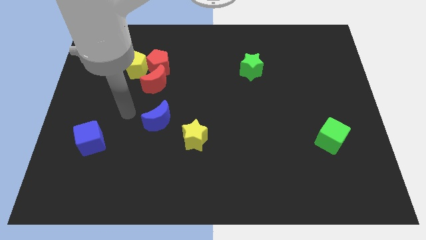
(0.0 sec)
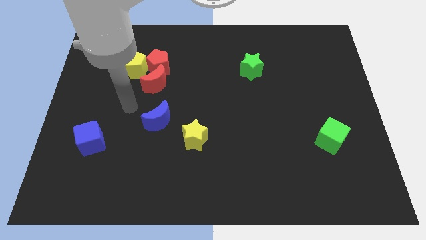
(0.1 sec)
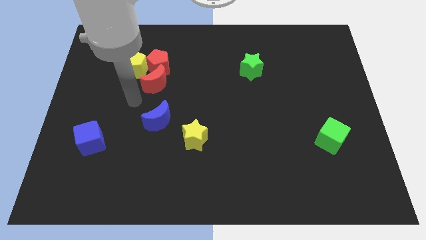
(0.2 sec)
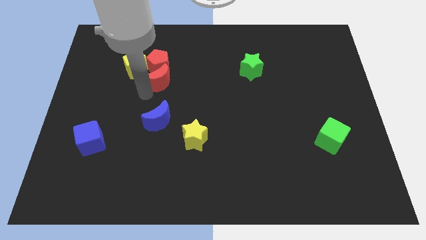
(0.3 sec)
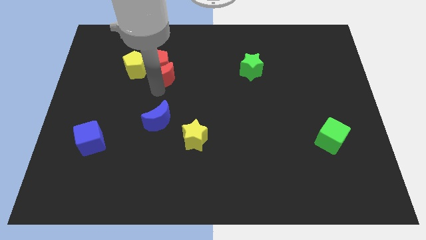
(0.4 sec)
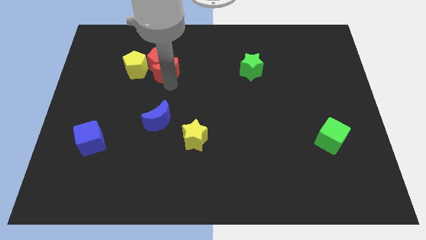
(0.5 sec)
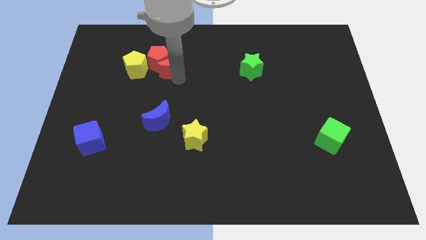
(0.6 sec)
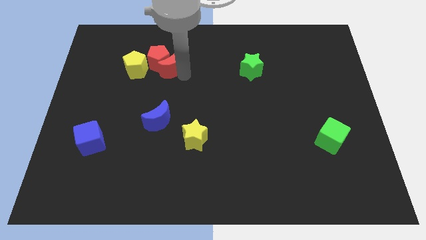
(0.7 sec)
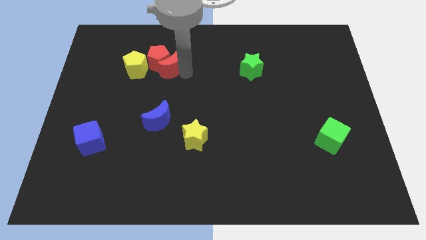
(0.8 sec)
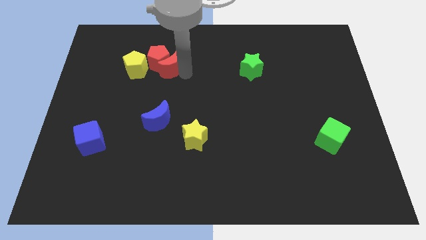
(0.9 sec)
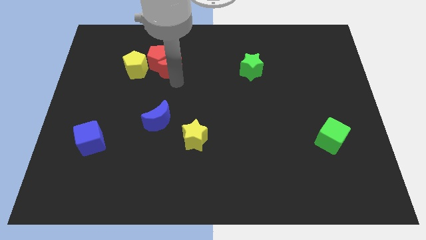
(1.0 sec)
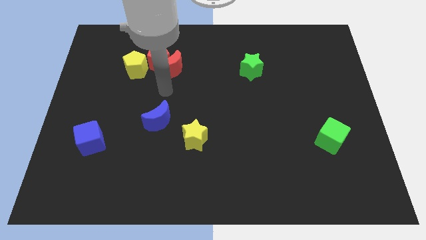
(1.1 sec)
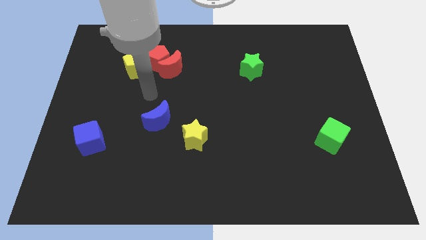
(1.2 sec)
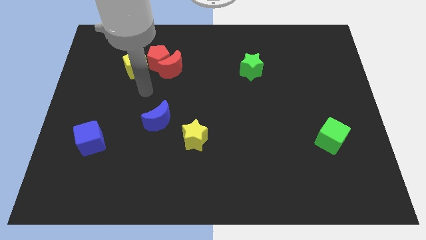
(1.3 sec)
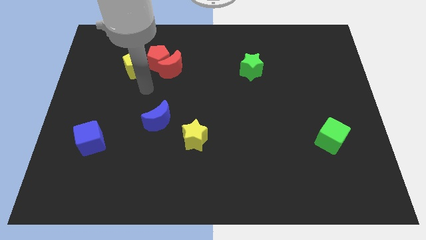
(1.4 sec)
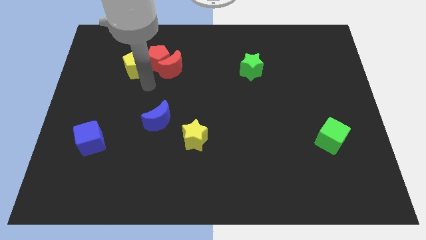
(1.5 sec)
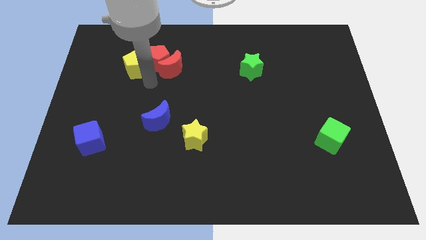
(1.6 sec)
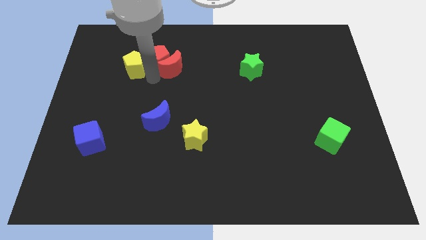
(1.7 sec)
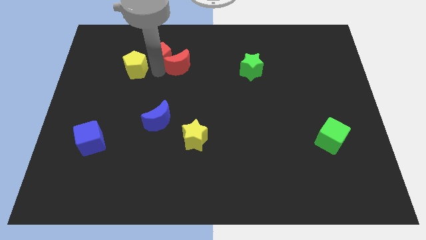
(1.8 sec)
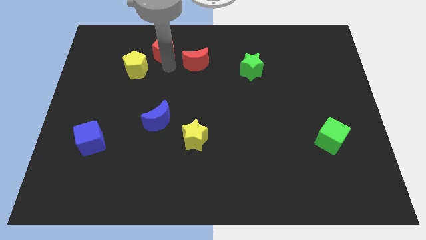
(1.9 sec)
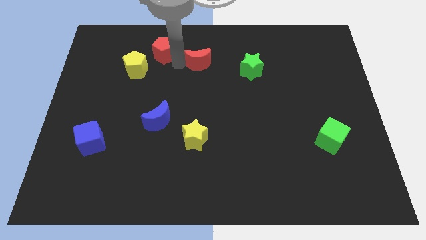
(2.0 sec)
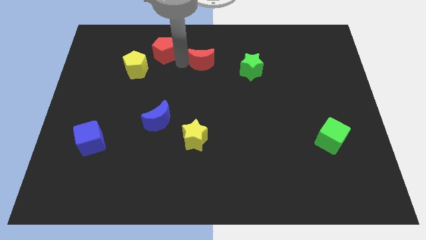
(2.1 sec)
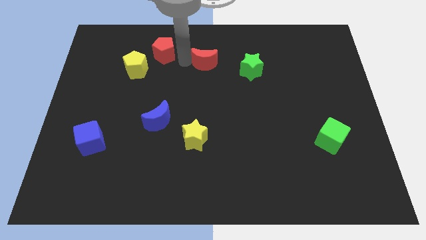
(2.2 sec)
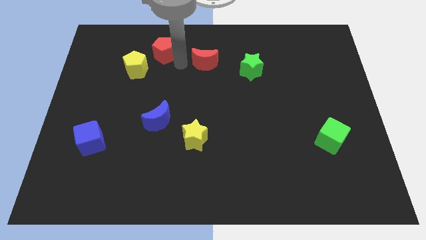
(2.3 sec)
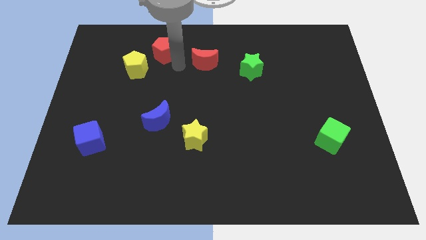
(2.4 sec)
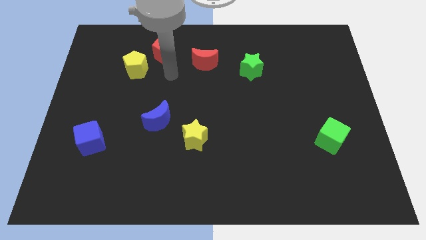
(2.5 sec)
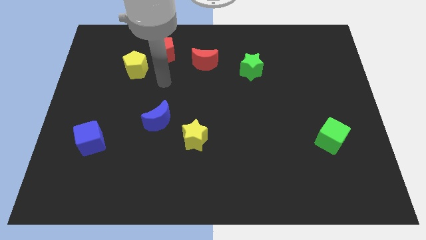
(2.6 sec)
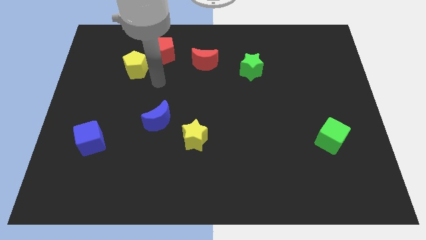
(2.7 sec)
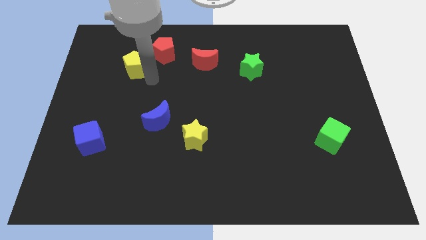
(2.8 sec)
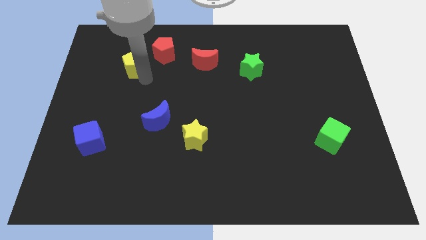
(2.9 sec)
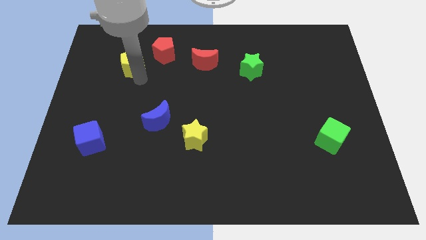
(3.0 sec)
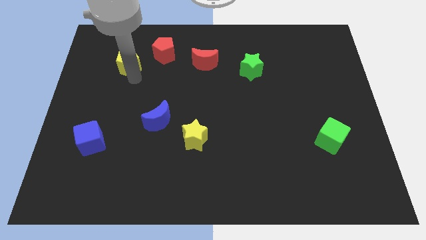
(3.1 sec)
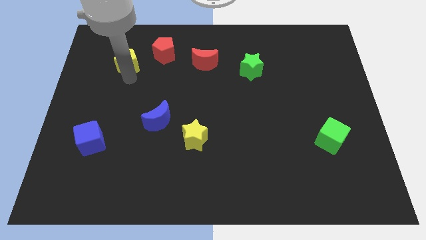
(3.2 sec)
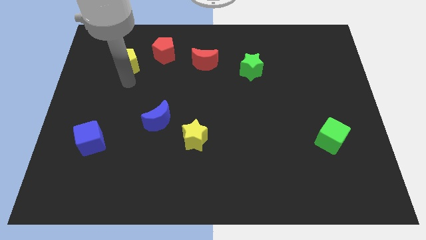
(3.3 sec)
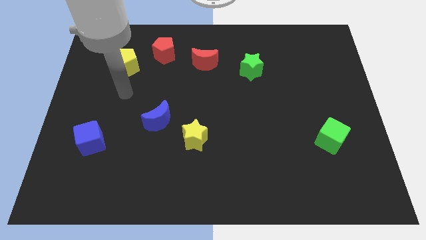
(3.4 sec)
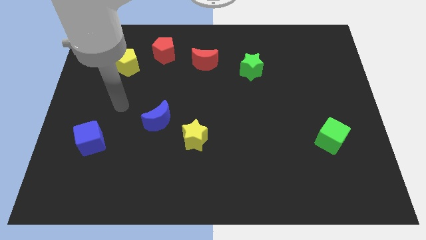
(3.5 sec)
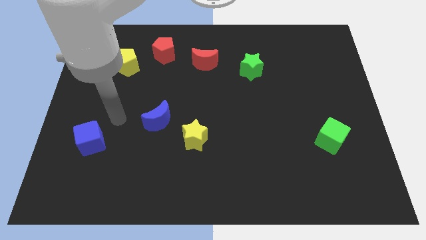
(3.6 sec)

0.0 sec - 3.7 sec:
separate the red blocks and the yellow pentagon

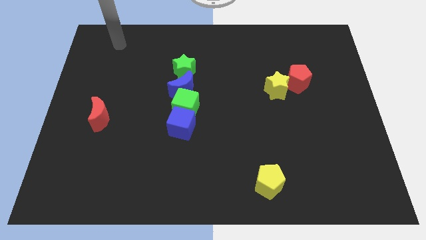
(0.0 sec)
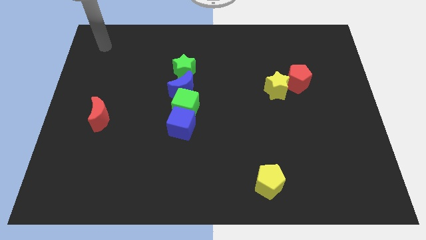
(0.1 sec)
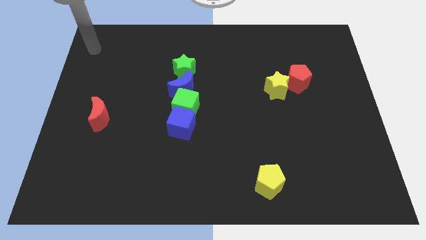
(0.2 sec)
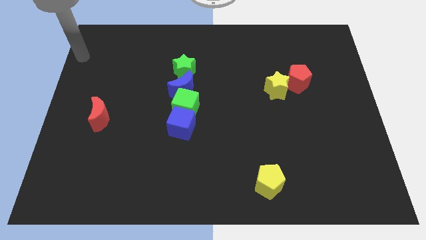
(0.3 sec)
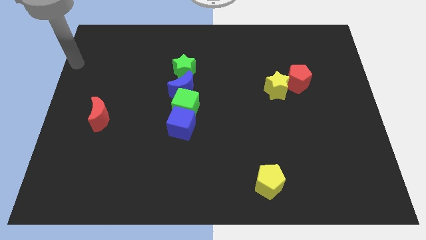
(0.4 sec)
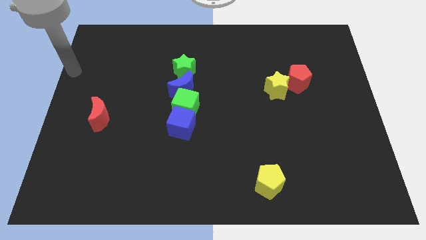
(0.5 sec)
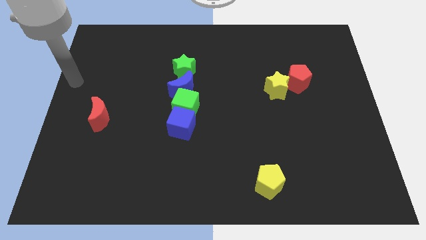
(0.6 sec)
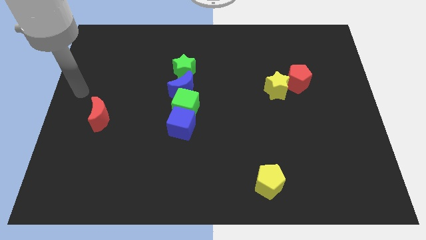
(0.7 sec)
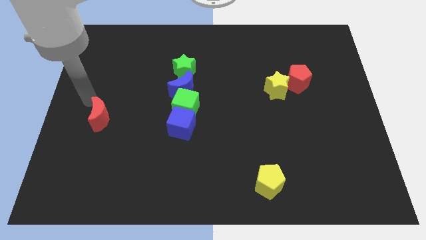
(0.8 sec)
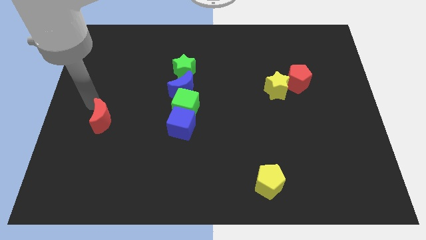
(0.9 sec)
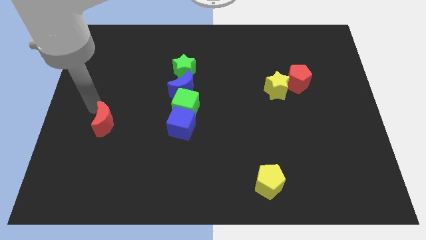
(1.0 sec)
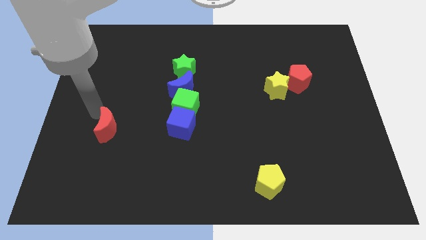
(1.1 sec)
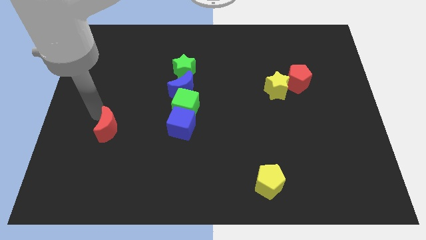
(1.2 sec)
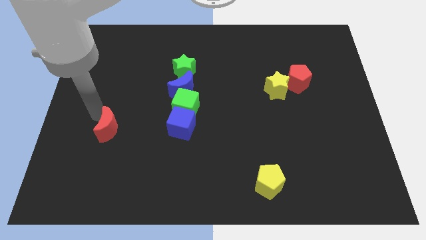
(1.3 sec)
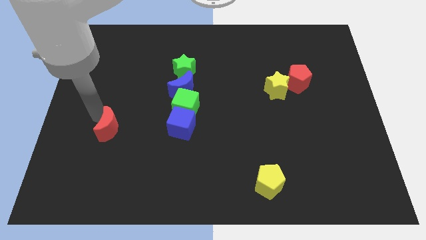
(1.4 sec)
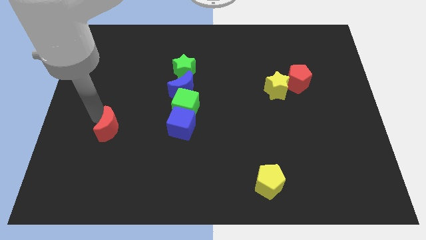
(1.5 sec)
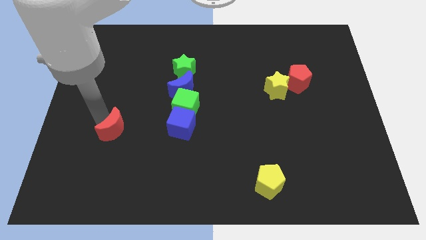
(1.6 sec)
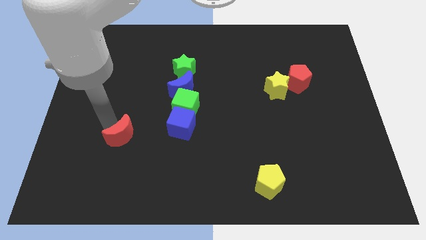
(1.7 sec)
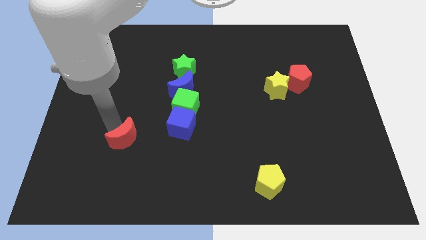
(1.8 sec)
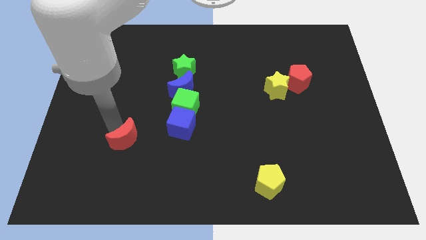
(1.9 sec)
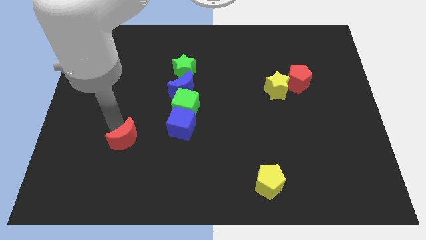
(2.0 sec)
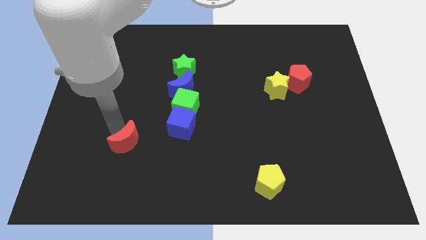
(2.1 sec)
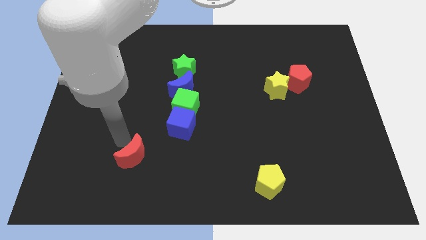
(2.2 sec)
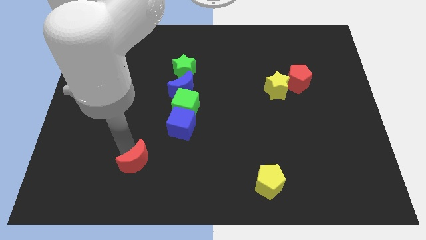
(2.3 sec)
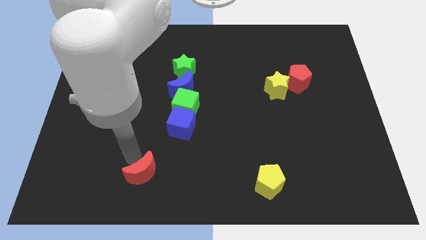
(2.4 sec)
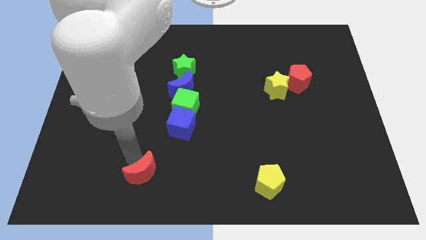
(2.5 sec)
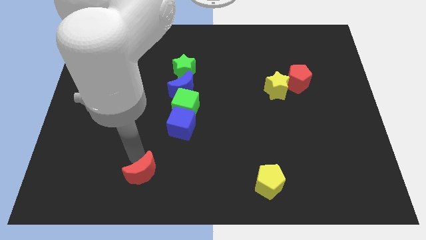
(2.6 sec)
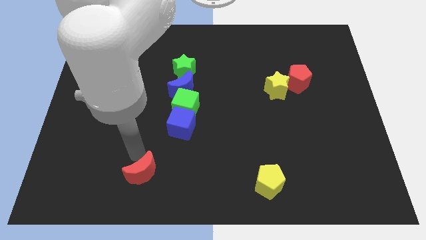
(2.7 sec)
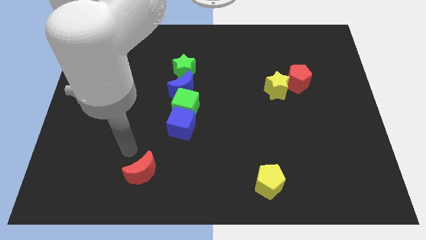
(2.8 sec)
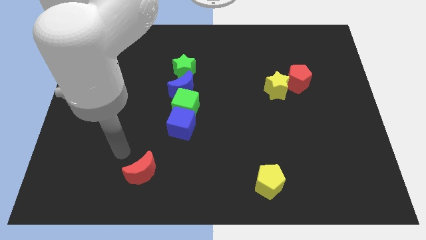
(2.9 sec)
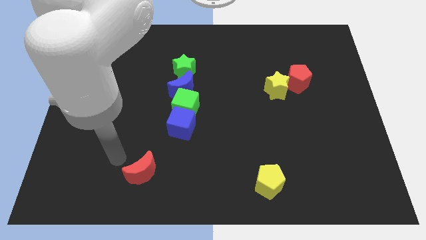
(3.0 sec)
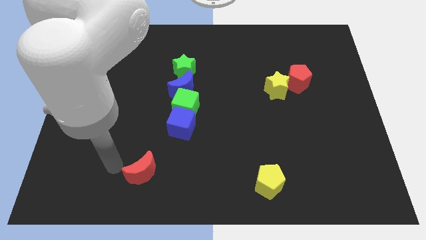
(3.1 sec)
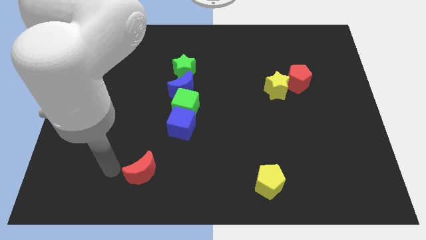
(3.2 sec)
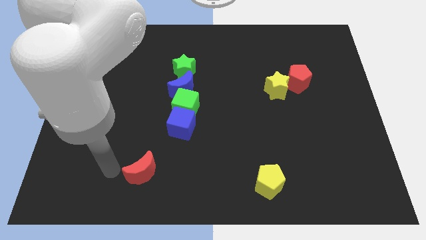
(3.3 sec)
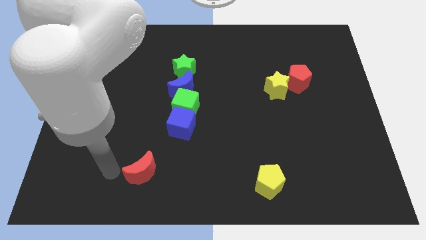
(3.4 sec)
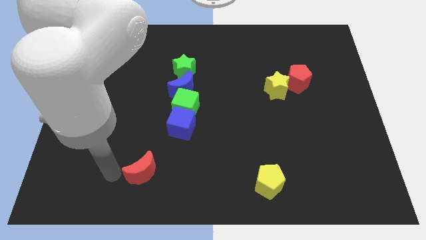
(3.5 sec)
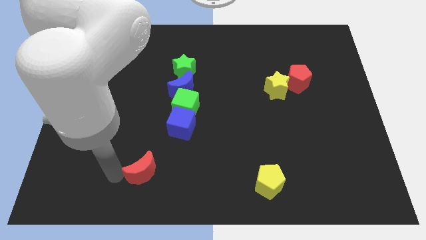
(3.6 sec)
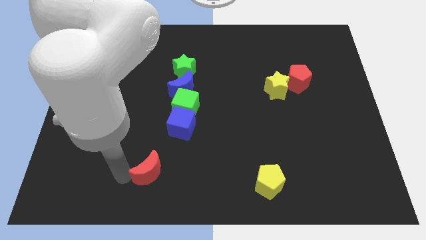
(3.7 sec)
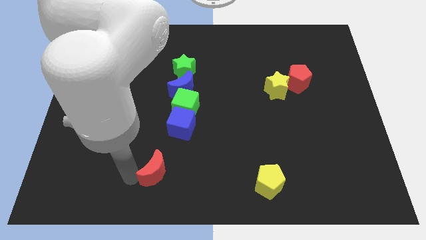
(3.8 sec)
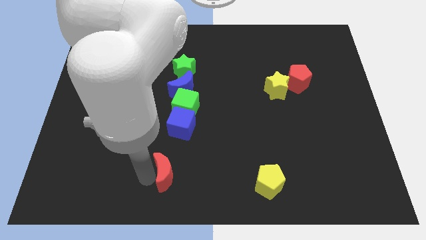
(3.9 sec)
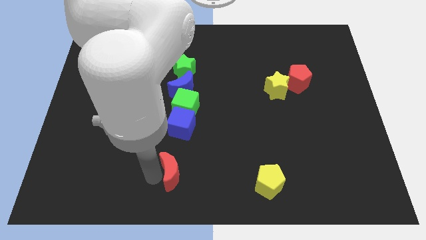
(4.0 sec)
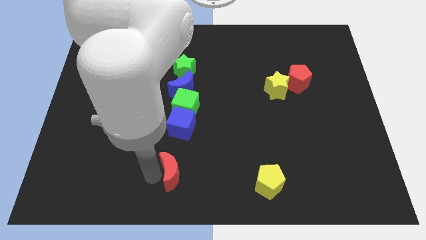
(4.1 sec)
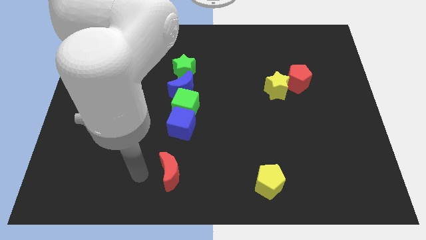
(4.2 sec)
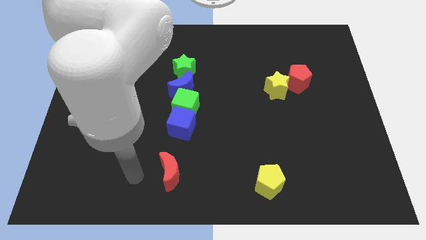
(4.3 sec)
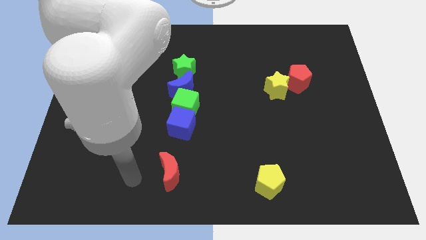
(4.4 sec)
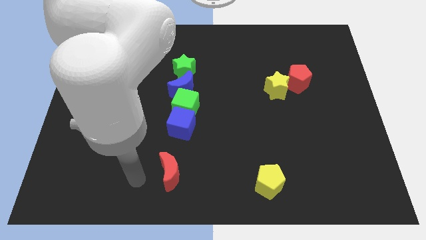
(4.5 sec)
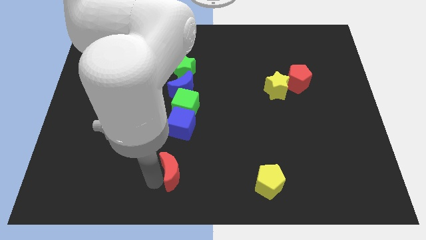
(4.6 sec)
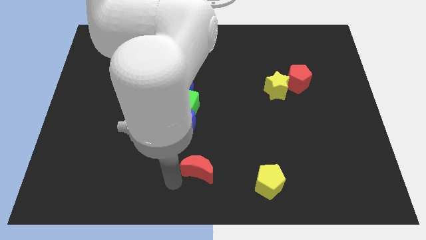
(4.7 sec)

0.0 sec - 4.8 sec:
place the red crescent below the vertical line of blocks

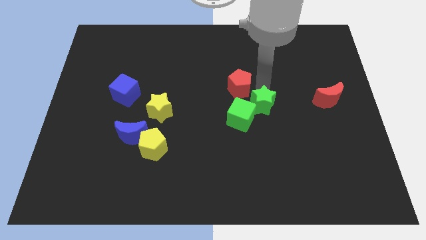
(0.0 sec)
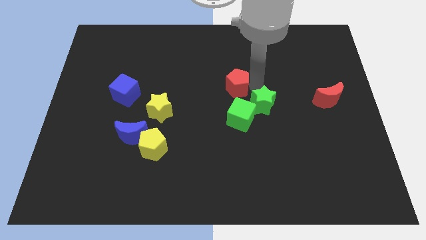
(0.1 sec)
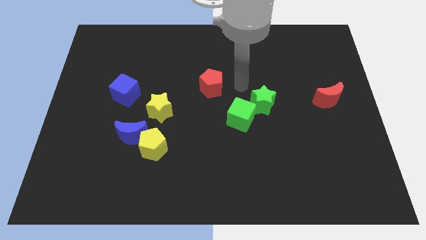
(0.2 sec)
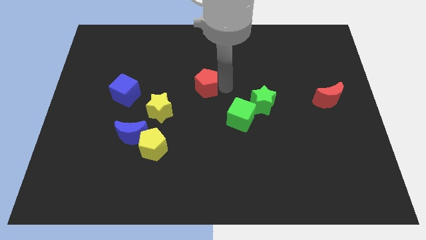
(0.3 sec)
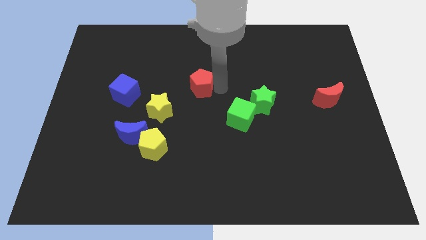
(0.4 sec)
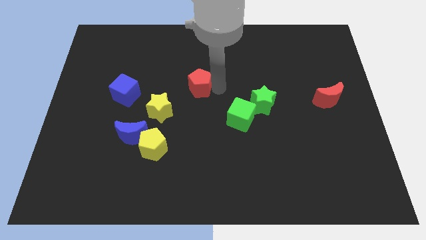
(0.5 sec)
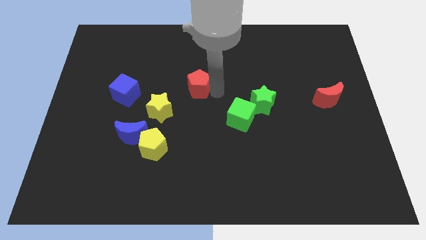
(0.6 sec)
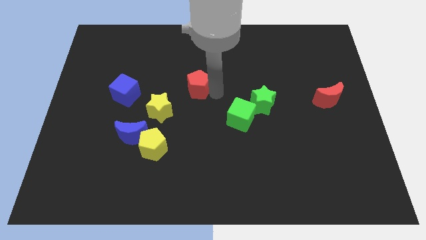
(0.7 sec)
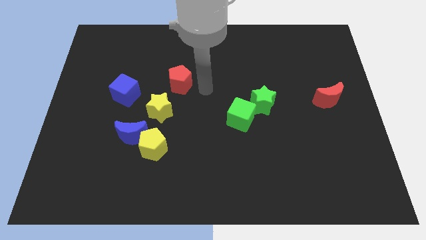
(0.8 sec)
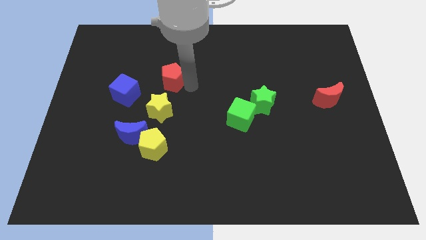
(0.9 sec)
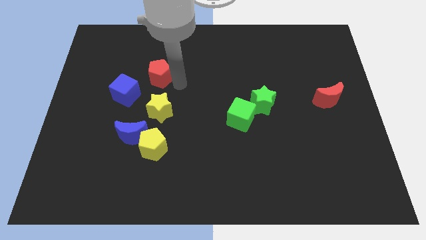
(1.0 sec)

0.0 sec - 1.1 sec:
slide the red pentgaon above the yellow star
